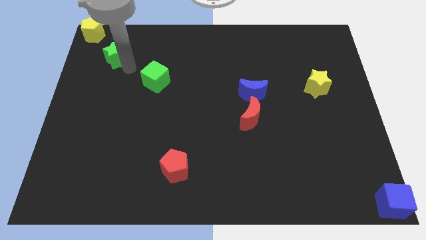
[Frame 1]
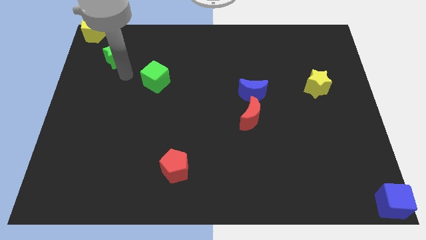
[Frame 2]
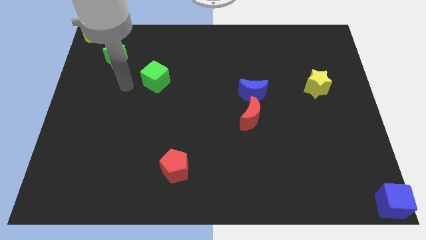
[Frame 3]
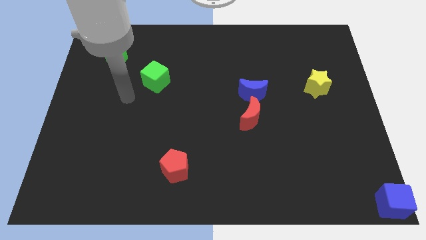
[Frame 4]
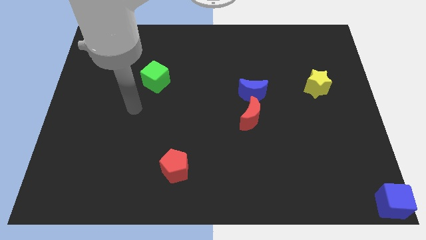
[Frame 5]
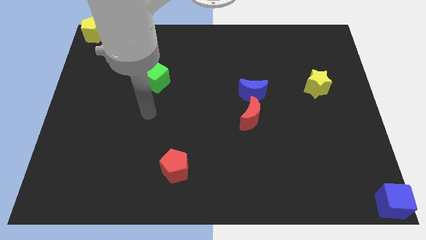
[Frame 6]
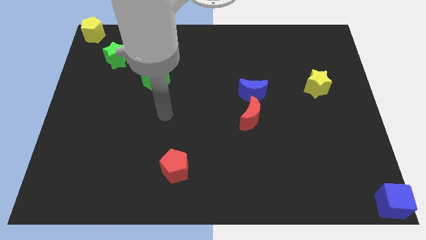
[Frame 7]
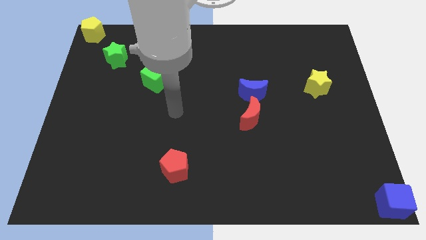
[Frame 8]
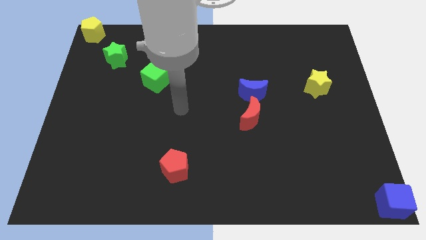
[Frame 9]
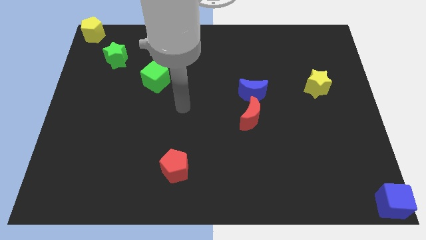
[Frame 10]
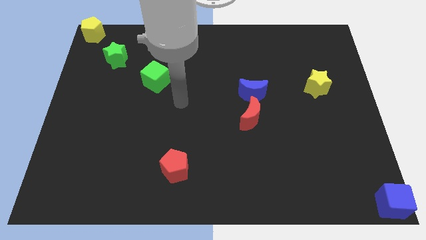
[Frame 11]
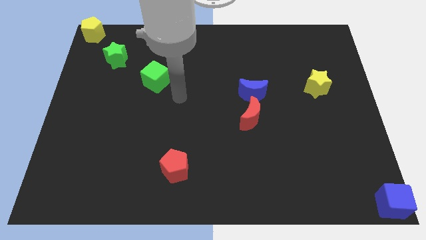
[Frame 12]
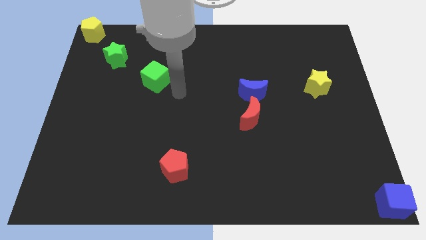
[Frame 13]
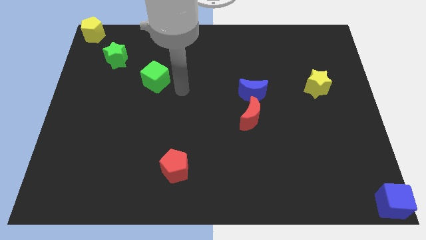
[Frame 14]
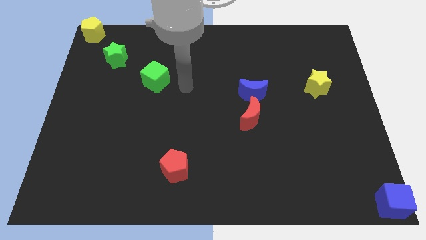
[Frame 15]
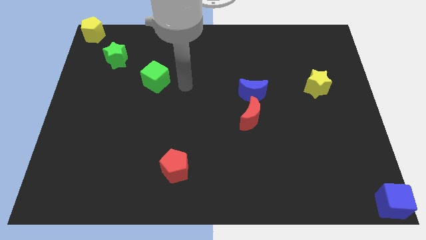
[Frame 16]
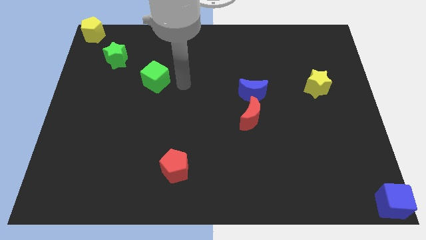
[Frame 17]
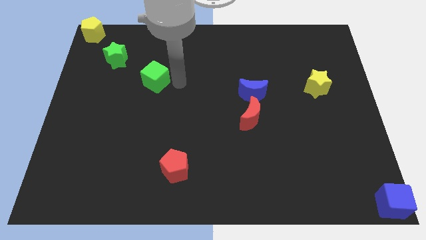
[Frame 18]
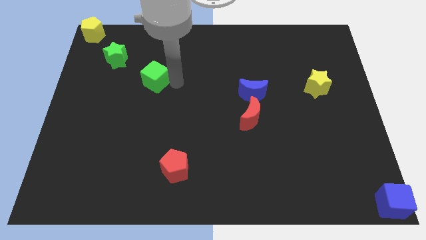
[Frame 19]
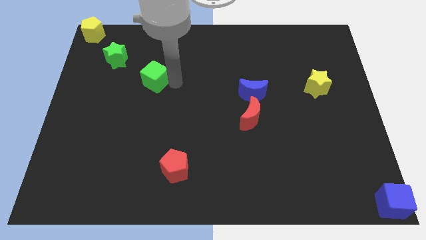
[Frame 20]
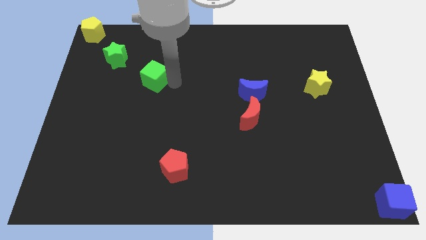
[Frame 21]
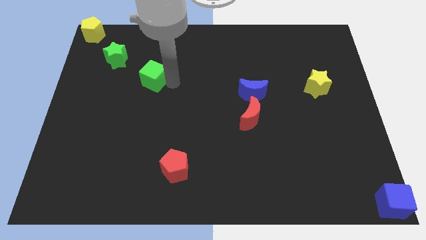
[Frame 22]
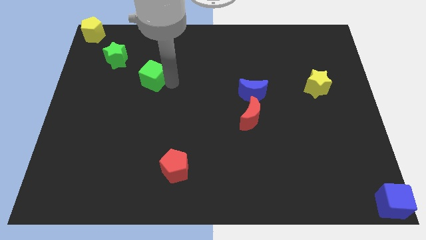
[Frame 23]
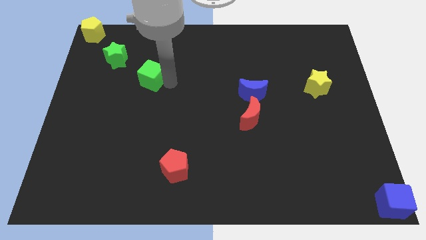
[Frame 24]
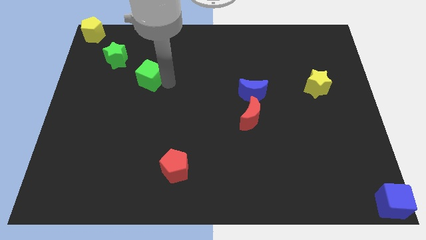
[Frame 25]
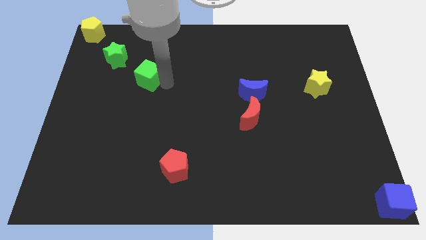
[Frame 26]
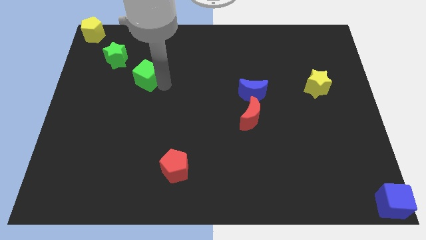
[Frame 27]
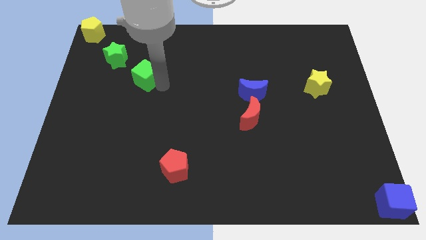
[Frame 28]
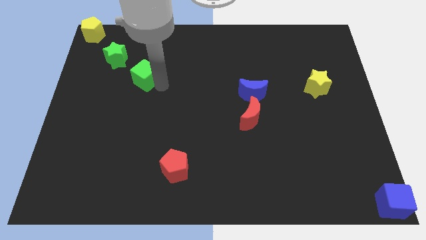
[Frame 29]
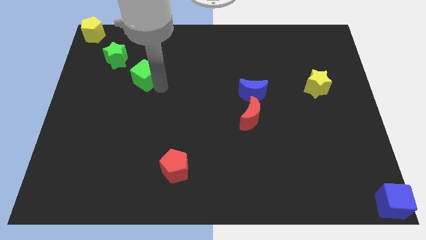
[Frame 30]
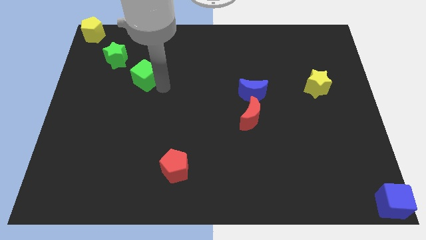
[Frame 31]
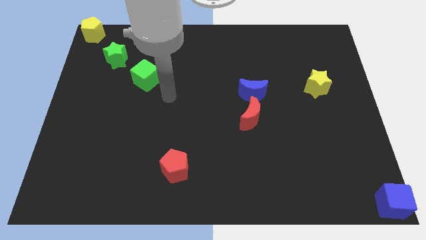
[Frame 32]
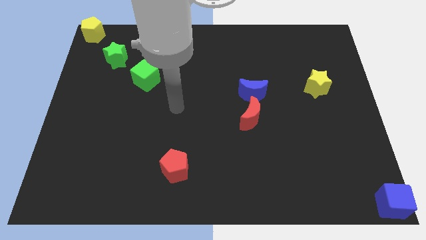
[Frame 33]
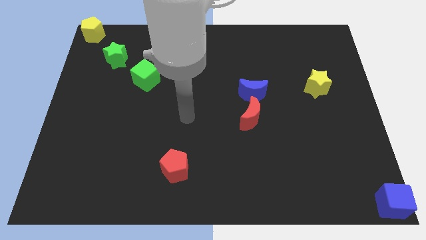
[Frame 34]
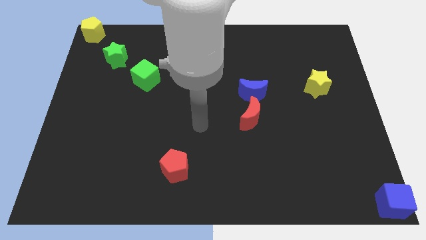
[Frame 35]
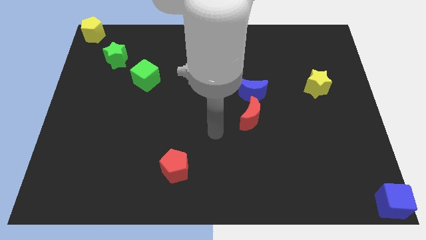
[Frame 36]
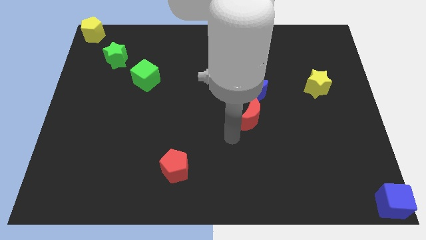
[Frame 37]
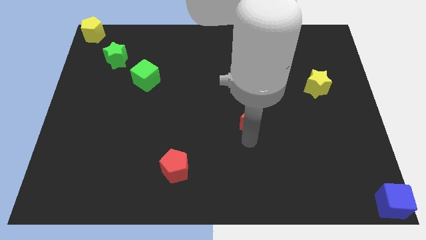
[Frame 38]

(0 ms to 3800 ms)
move your arm away from green cube

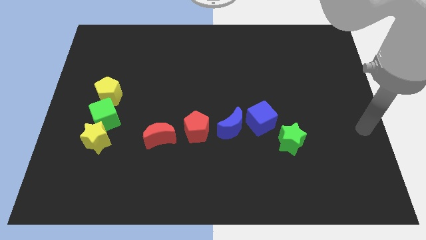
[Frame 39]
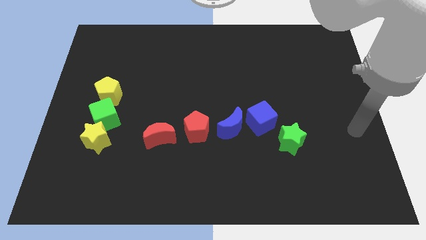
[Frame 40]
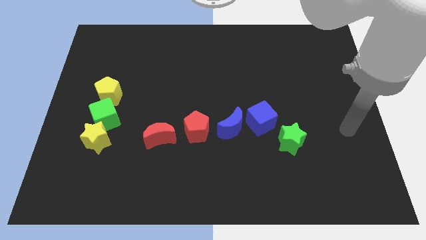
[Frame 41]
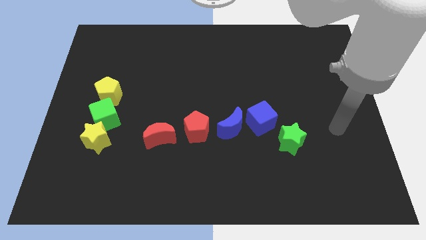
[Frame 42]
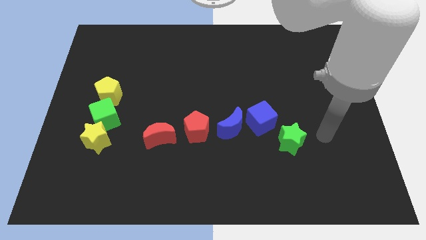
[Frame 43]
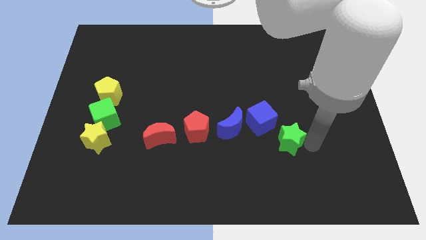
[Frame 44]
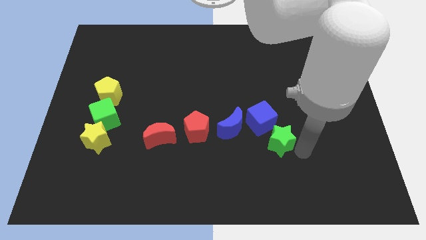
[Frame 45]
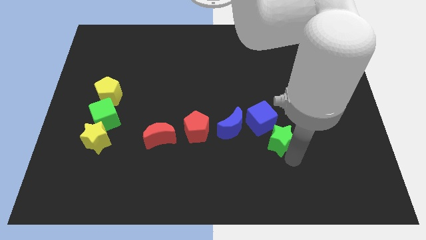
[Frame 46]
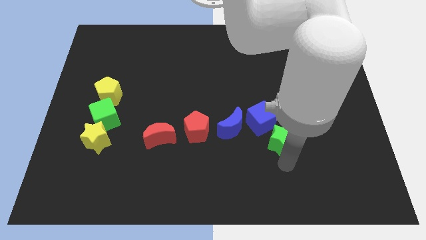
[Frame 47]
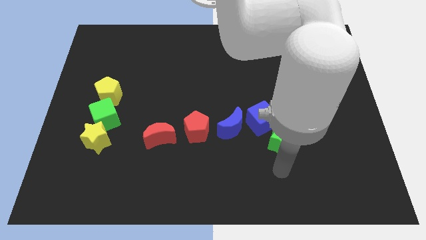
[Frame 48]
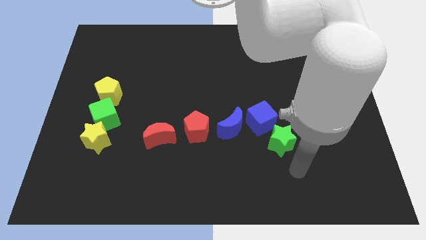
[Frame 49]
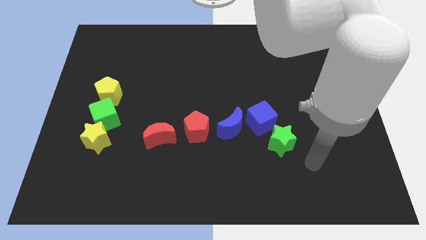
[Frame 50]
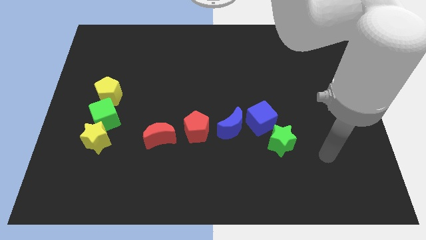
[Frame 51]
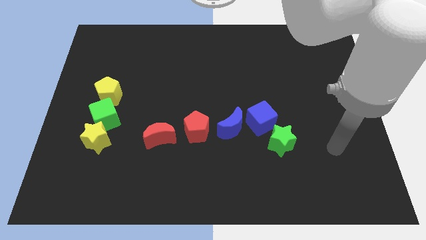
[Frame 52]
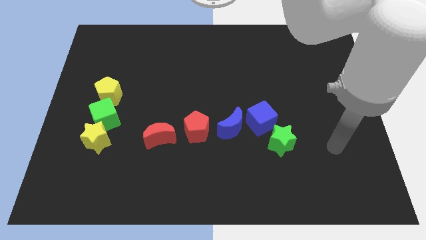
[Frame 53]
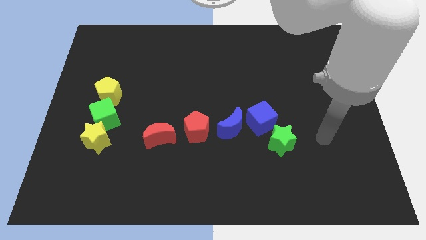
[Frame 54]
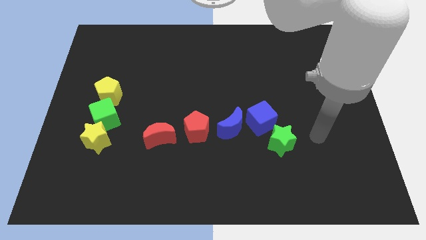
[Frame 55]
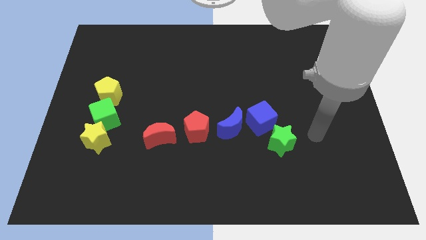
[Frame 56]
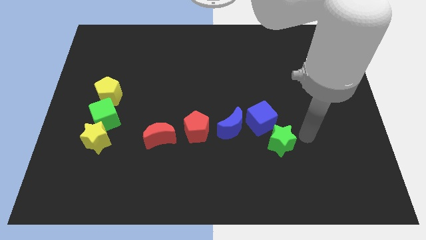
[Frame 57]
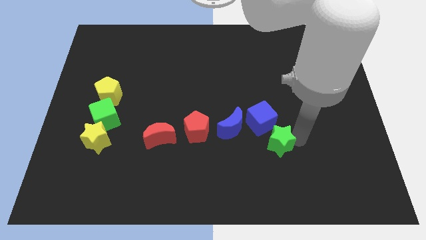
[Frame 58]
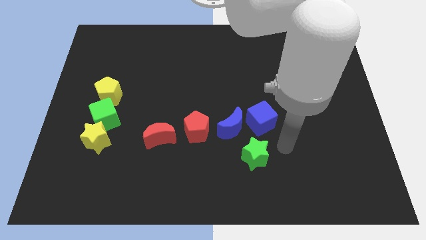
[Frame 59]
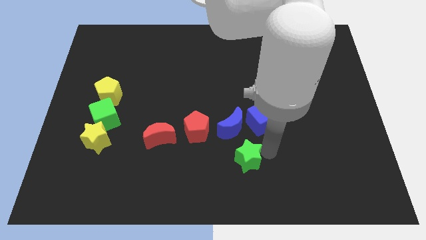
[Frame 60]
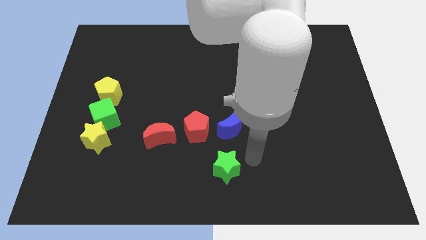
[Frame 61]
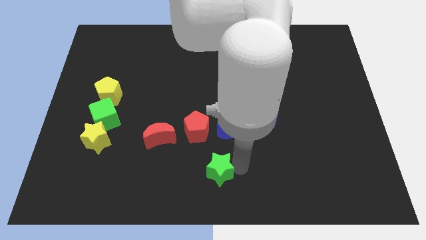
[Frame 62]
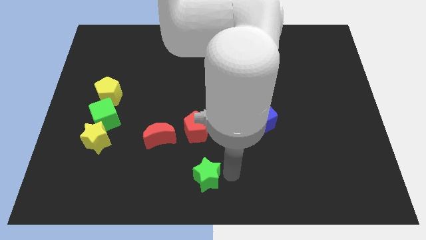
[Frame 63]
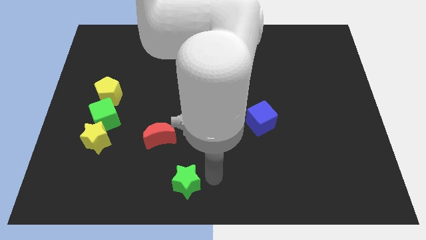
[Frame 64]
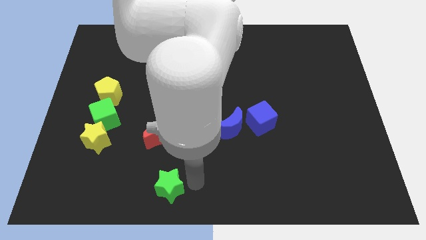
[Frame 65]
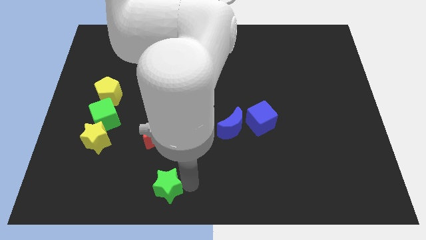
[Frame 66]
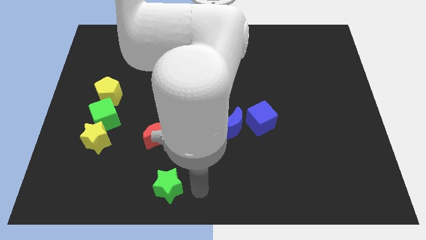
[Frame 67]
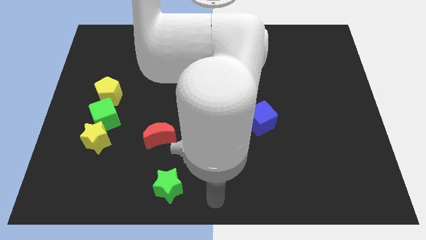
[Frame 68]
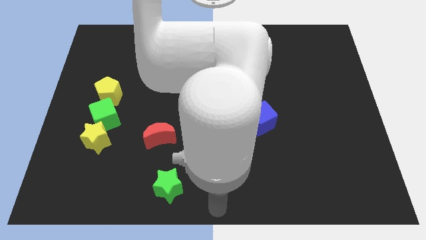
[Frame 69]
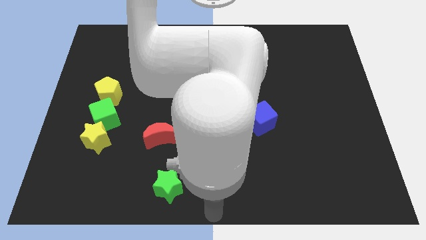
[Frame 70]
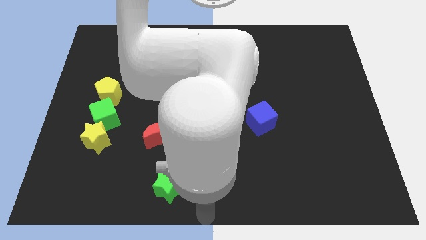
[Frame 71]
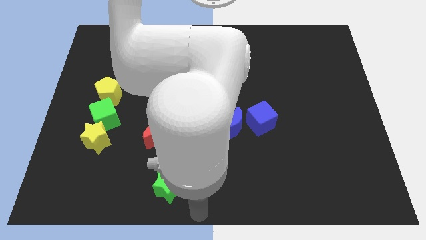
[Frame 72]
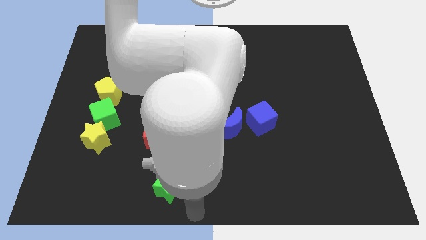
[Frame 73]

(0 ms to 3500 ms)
move the green star below the red moon

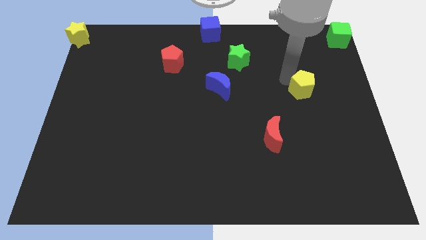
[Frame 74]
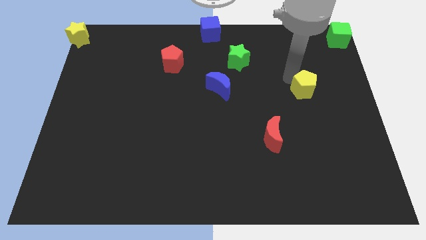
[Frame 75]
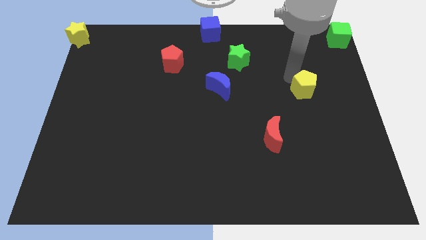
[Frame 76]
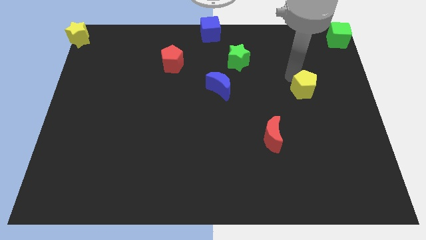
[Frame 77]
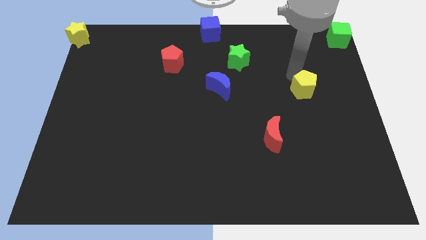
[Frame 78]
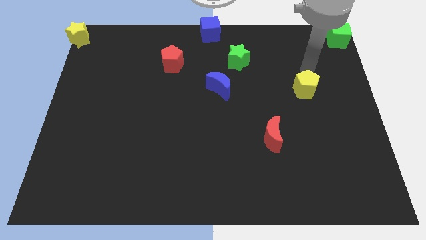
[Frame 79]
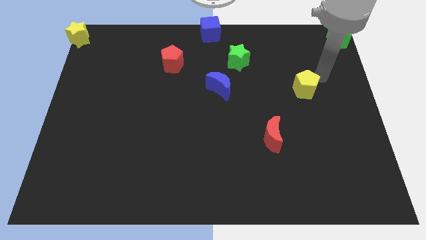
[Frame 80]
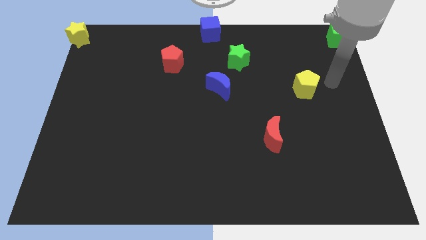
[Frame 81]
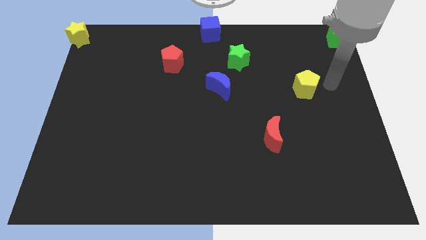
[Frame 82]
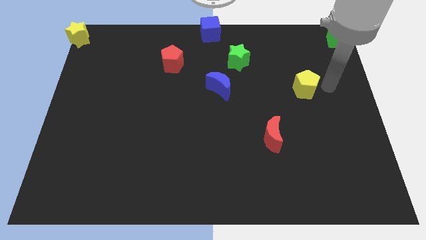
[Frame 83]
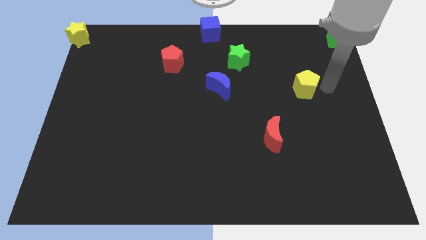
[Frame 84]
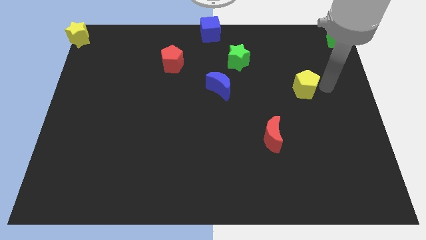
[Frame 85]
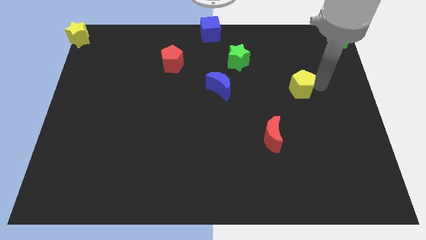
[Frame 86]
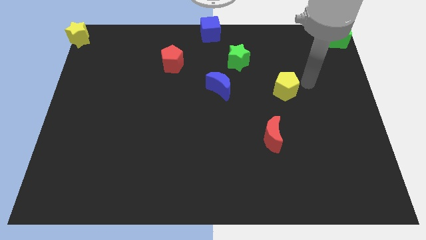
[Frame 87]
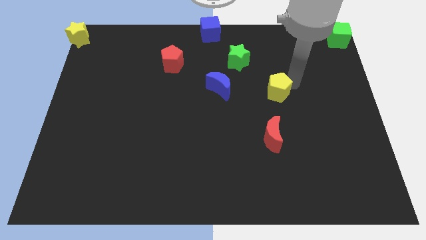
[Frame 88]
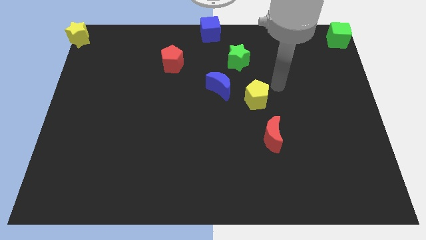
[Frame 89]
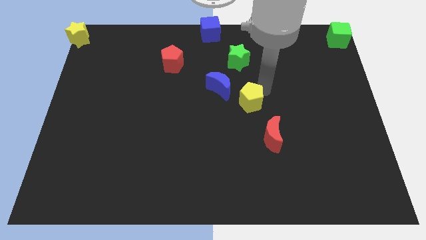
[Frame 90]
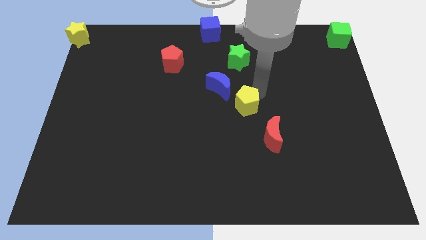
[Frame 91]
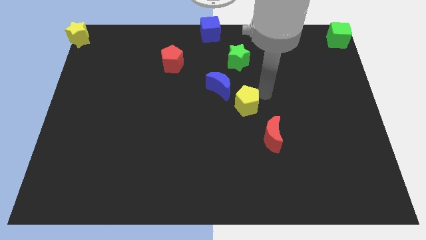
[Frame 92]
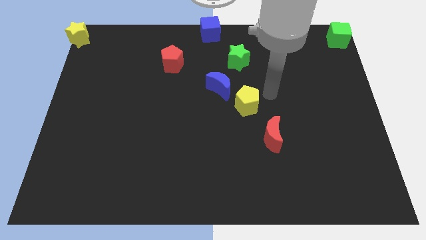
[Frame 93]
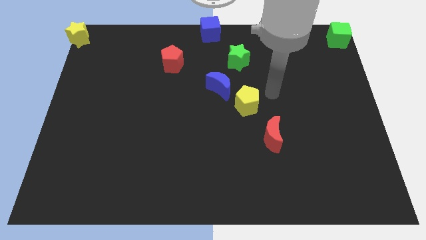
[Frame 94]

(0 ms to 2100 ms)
push the yellow pentagon between the blue moon and red moon
